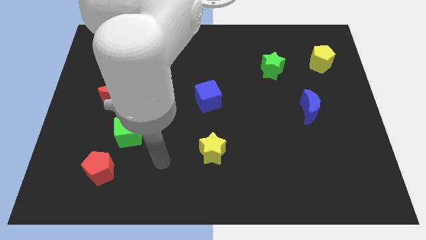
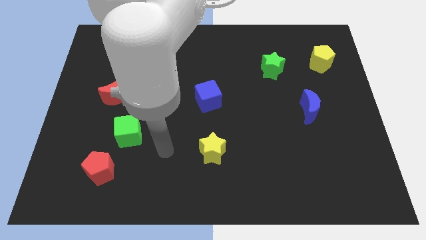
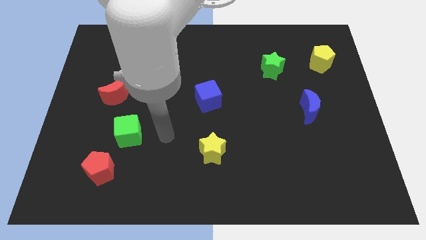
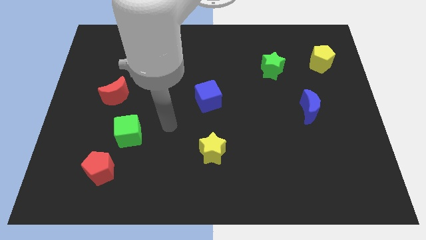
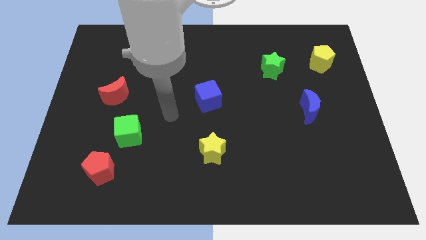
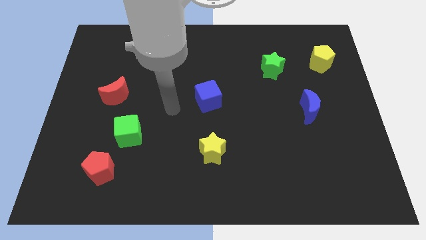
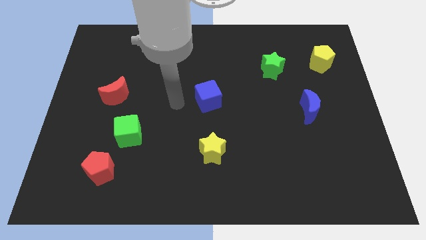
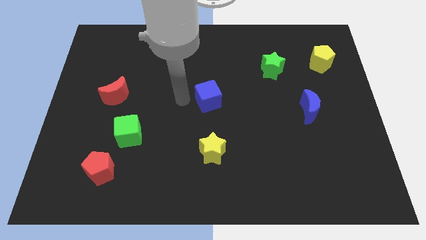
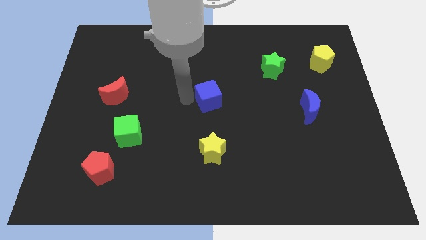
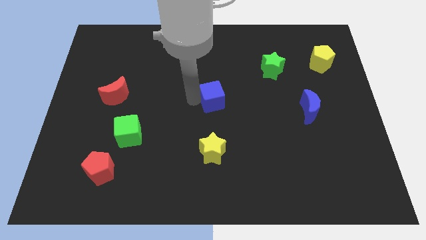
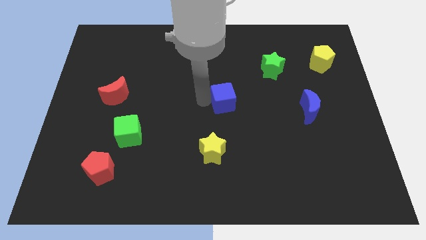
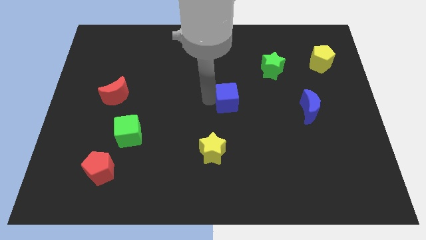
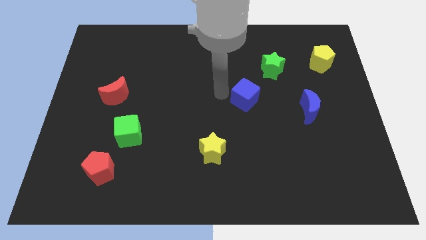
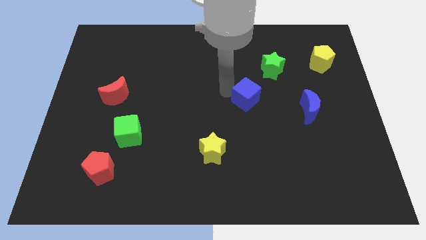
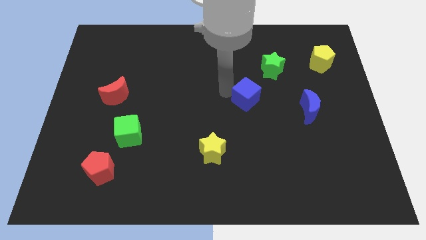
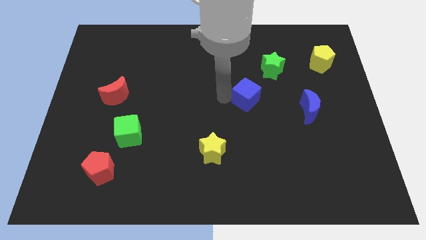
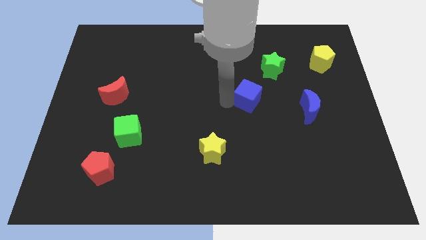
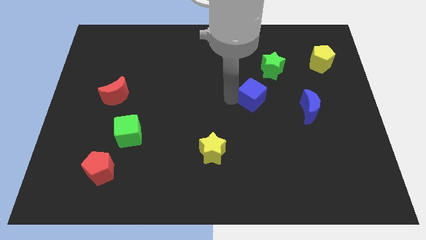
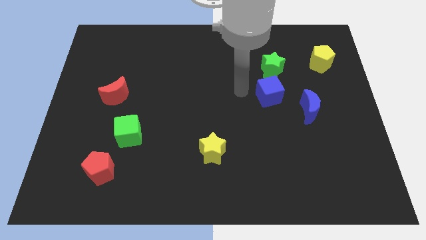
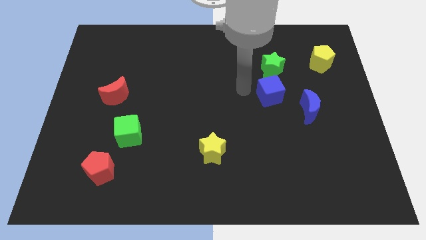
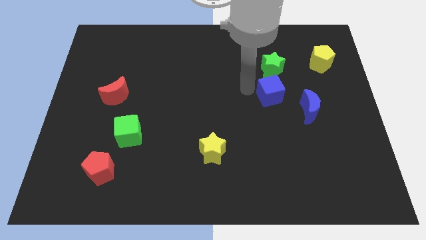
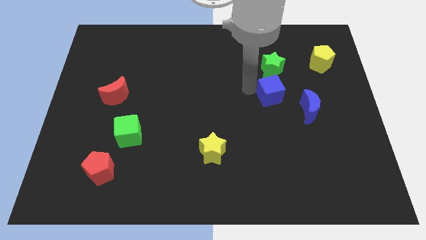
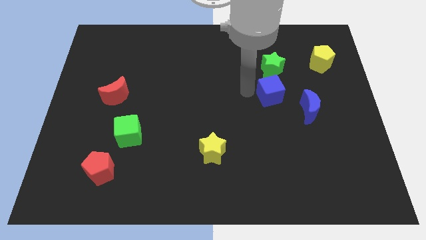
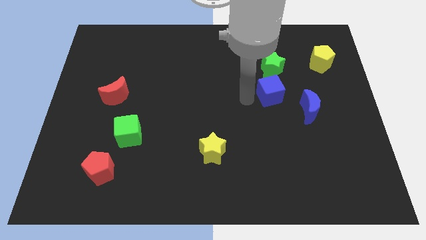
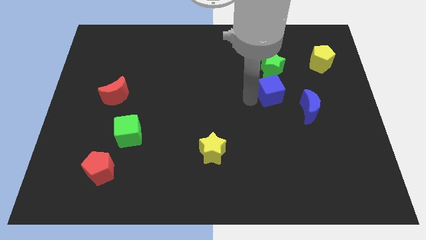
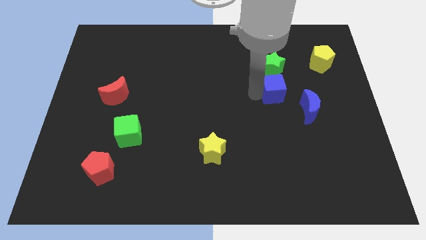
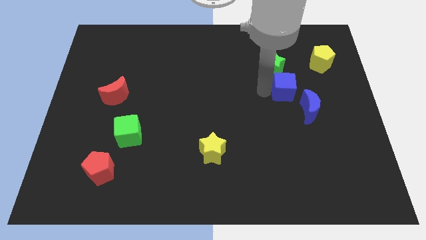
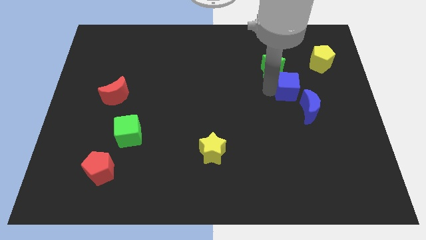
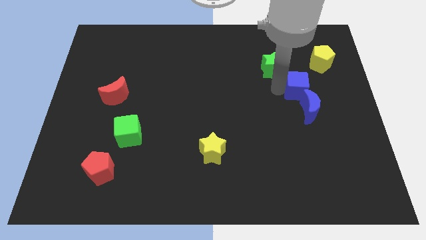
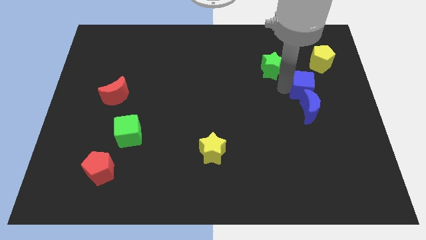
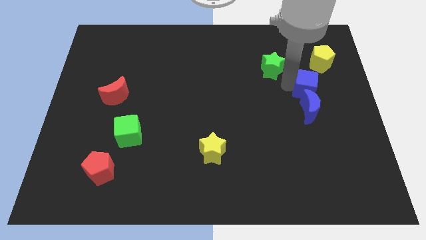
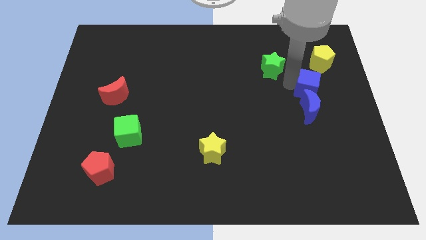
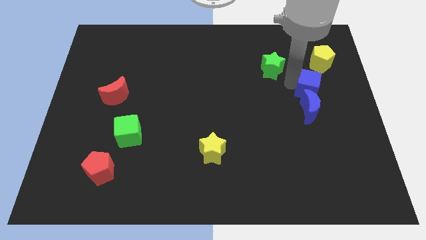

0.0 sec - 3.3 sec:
move the blue cube above the blue moon

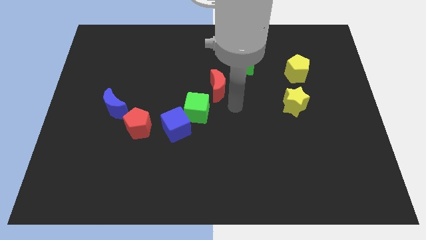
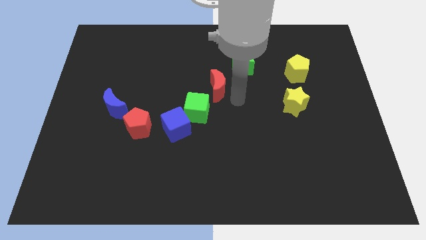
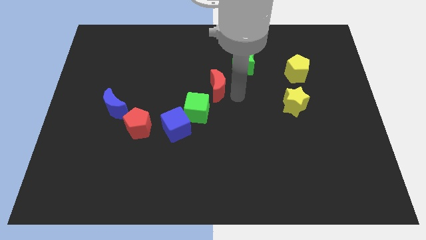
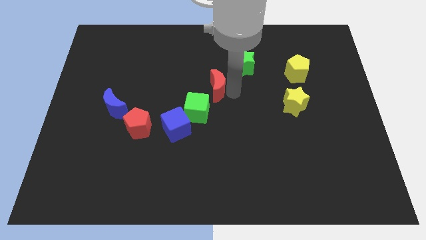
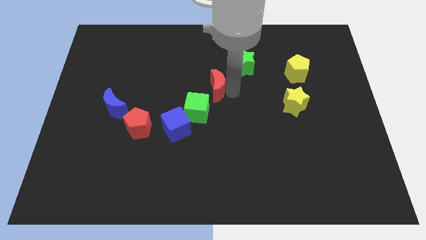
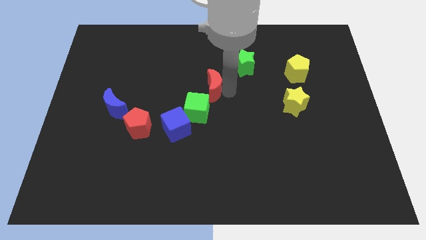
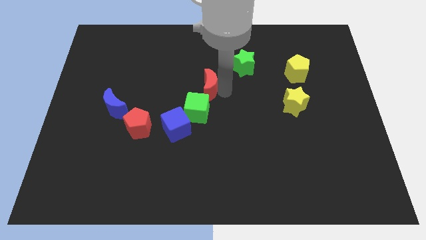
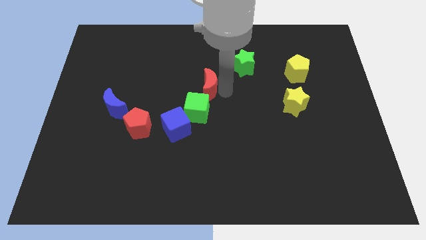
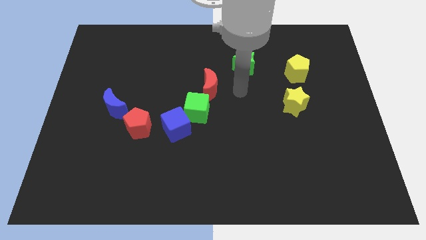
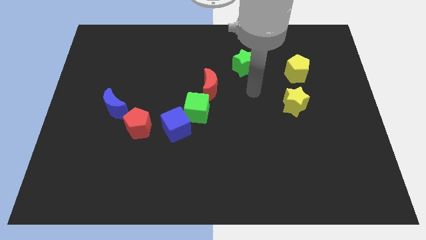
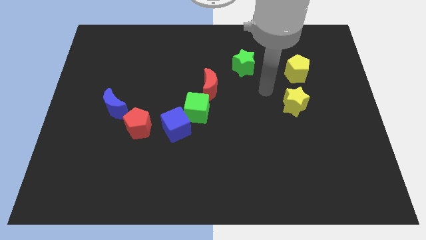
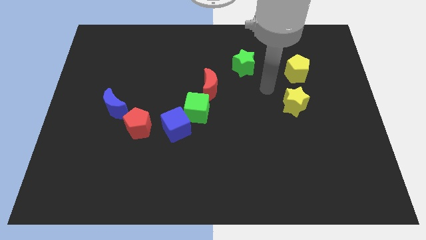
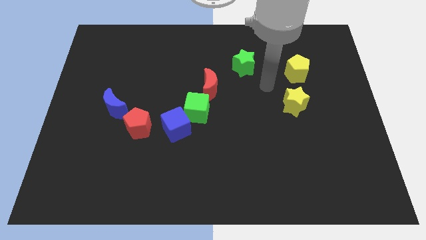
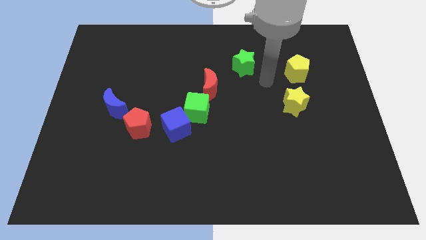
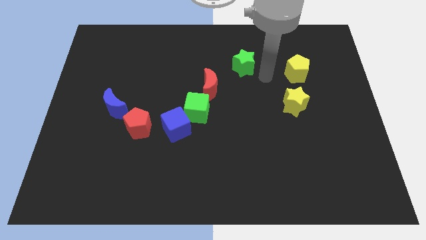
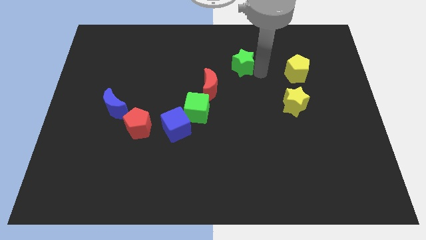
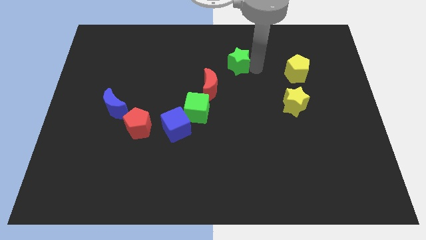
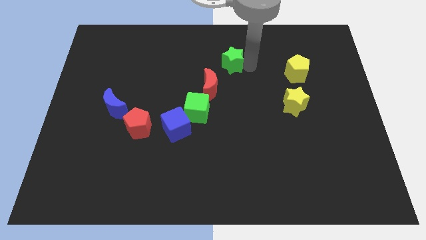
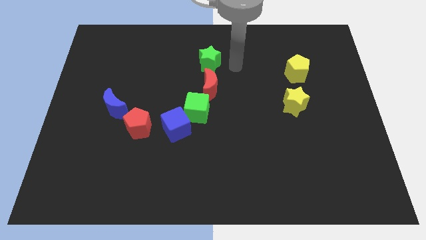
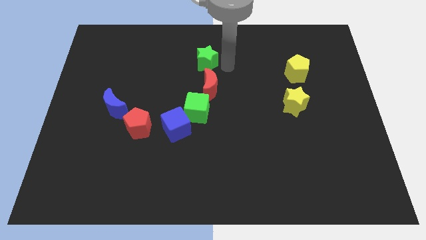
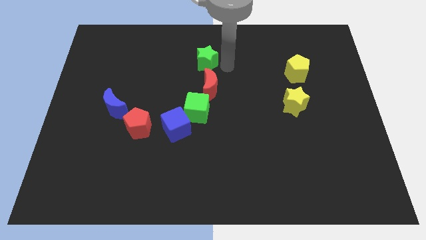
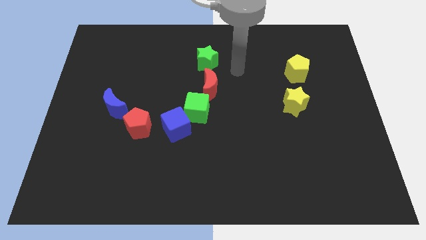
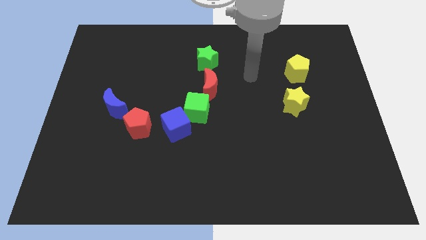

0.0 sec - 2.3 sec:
move red crescent above the green cube

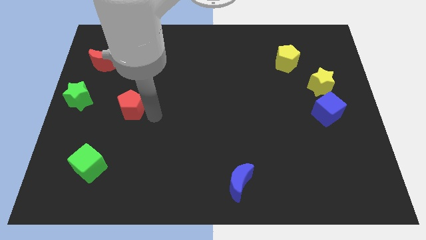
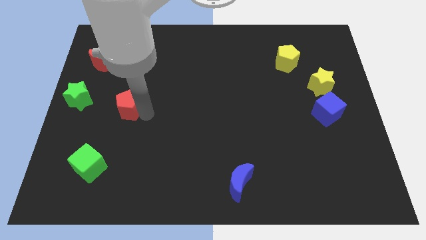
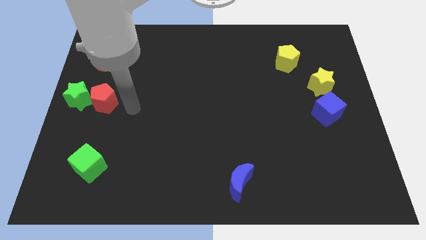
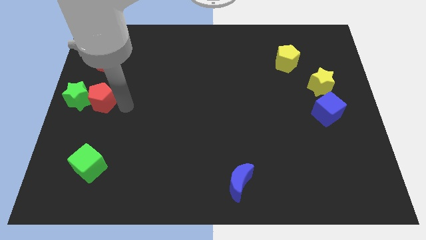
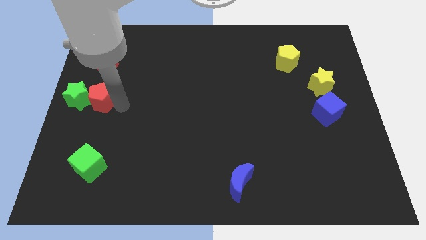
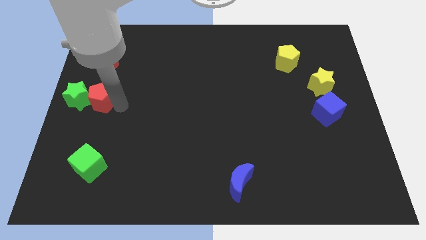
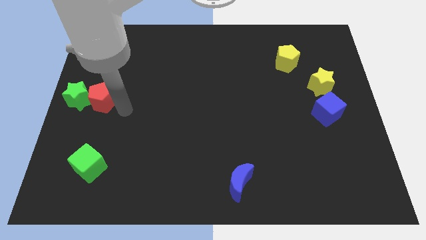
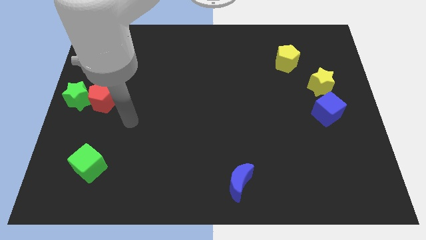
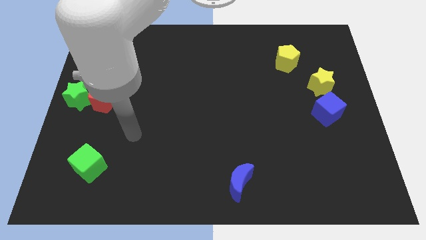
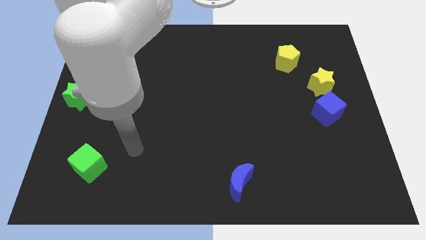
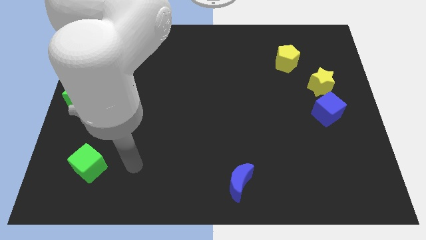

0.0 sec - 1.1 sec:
move your arm away from red pentagon

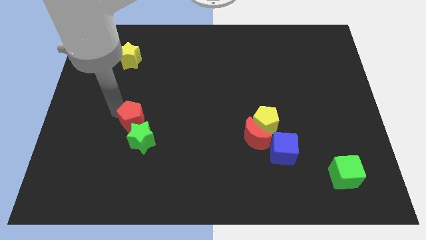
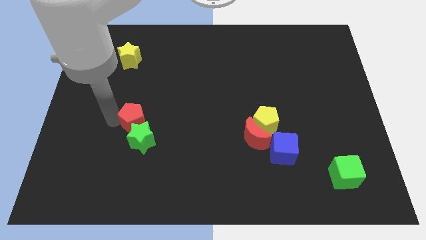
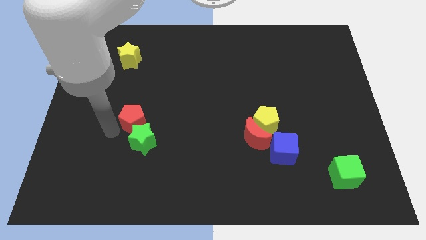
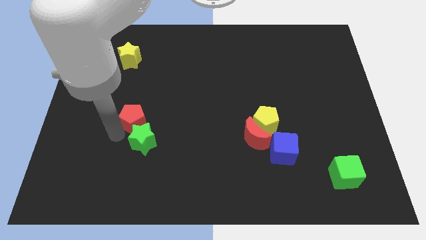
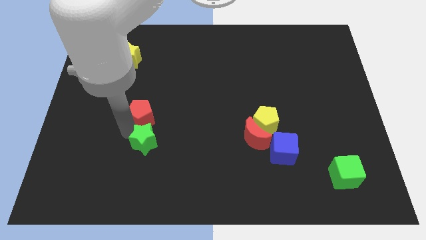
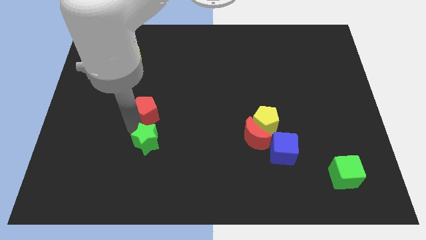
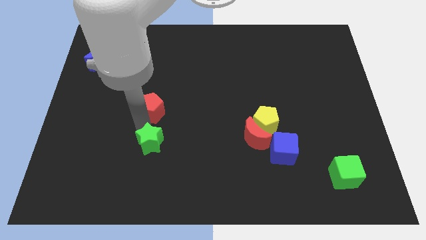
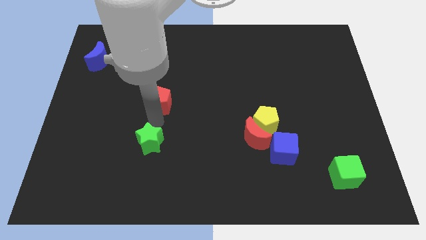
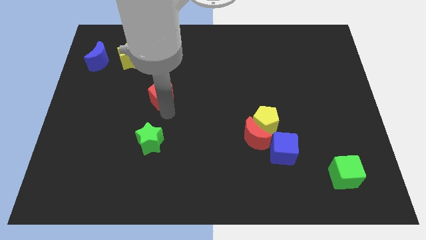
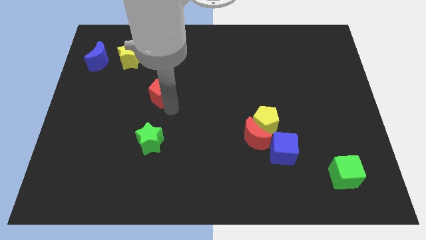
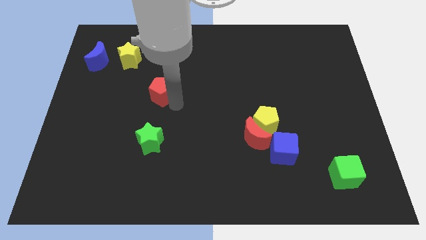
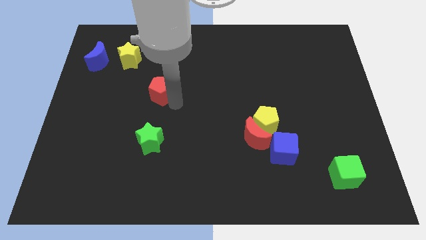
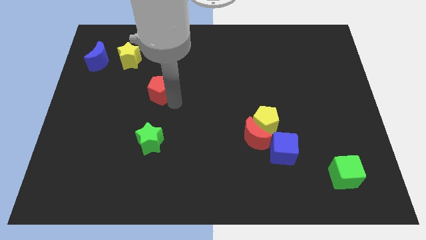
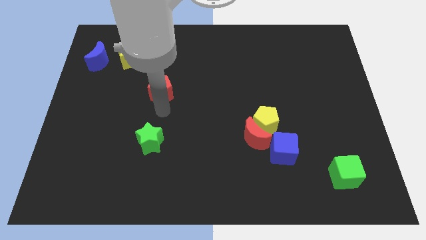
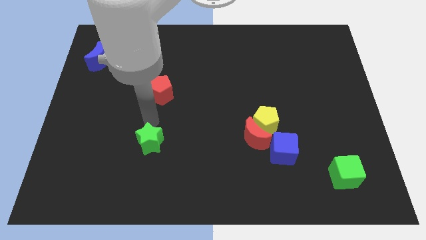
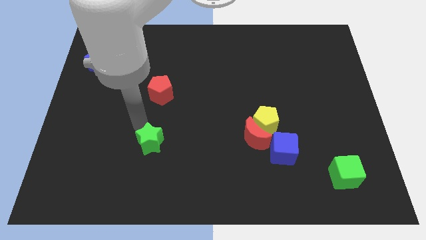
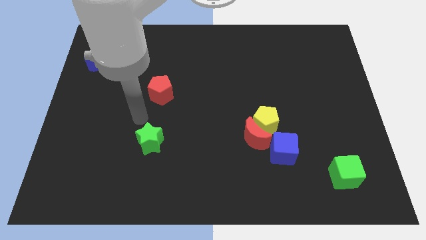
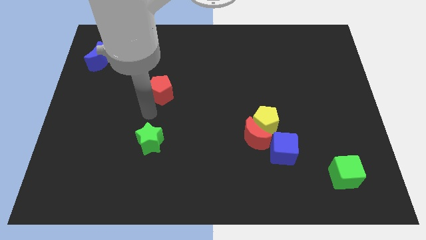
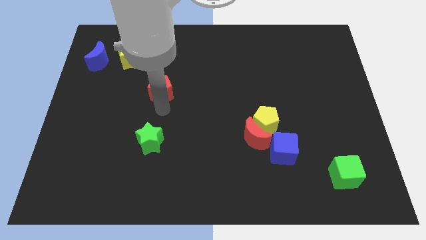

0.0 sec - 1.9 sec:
drag the red pentagon towards the top side of the board

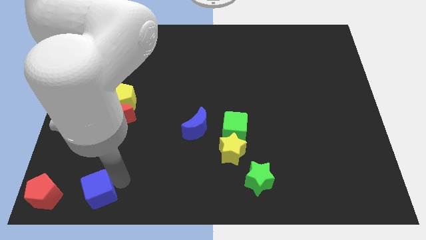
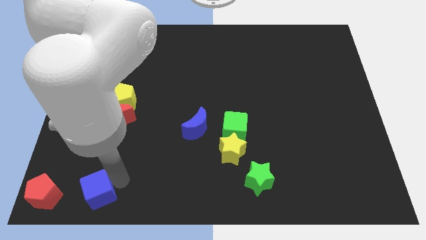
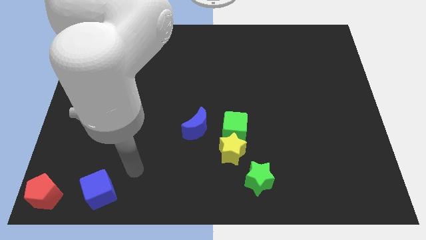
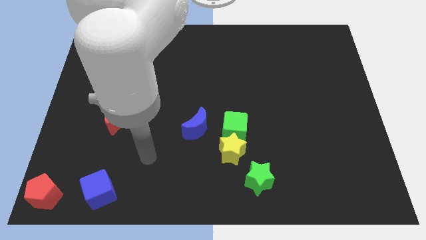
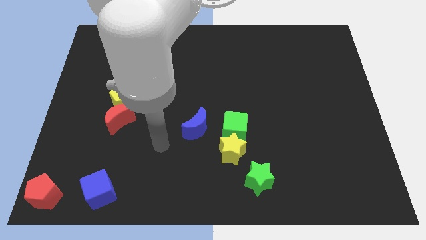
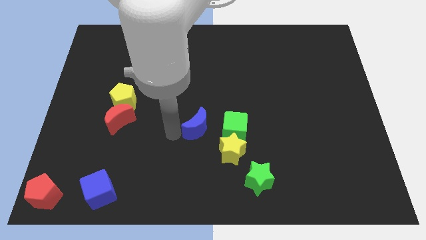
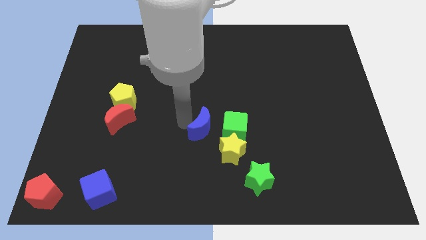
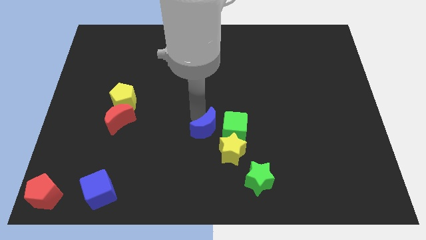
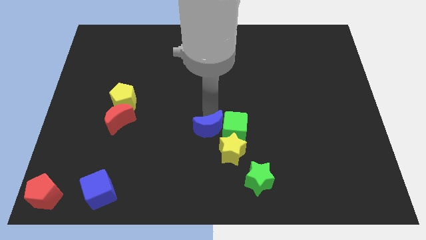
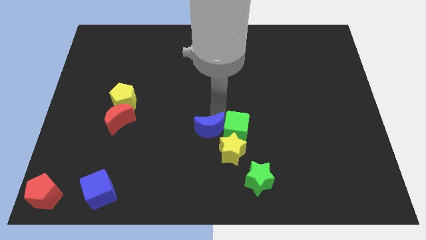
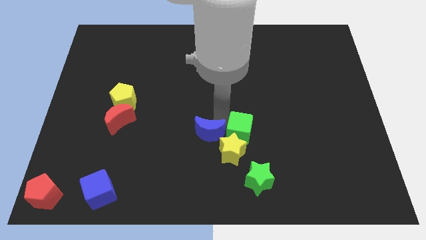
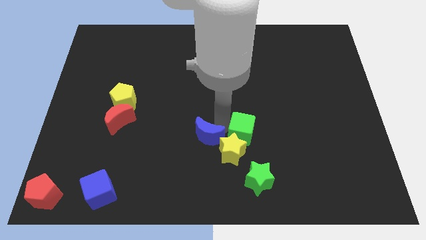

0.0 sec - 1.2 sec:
move the blue moon into the green cube
